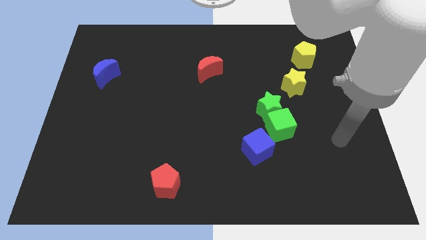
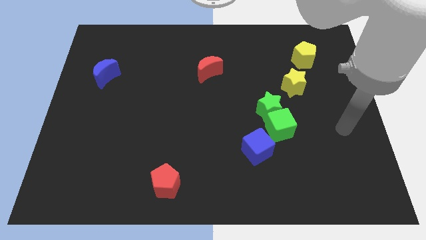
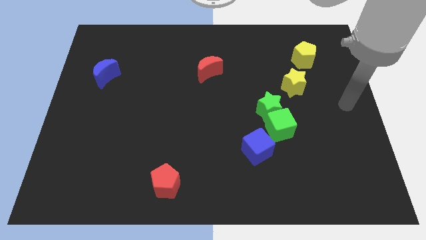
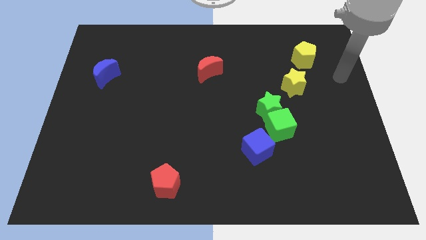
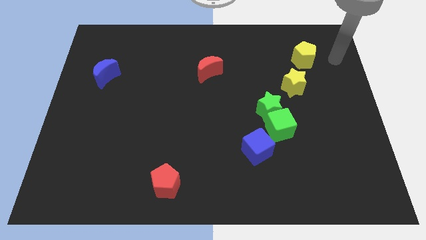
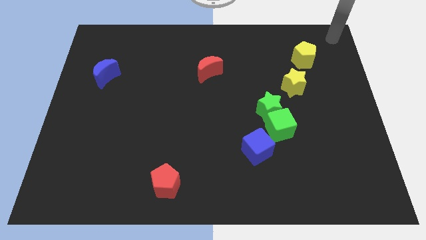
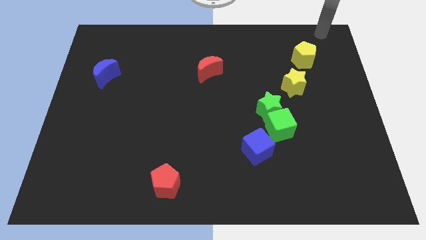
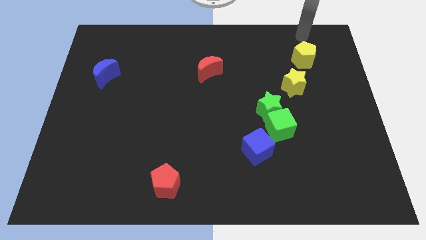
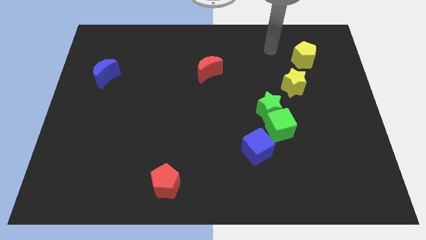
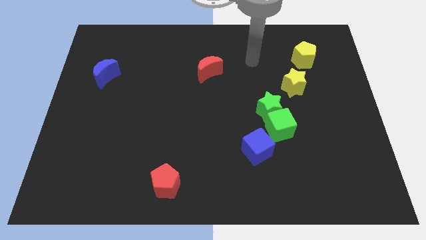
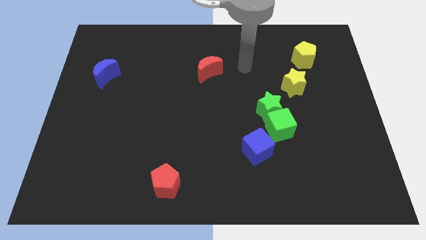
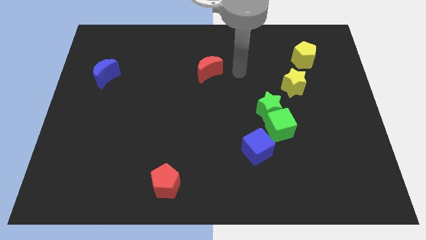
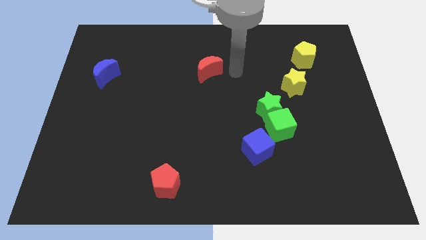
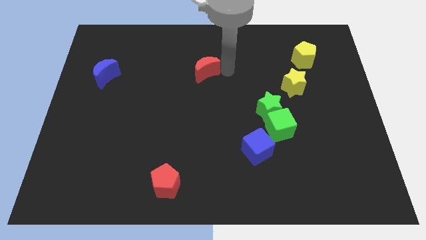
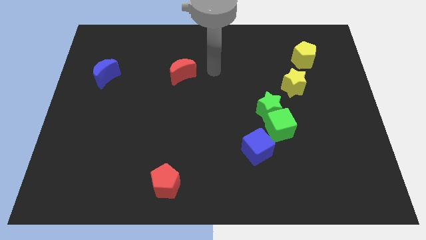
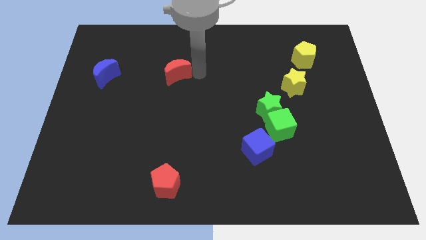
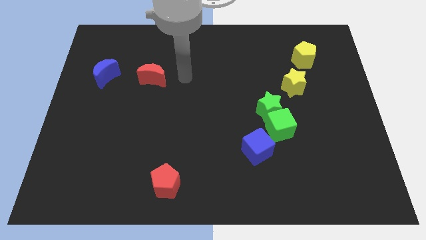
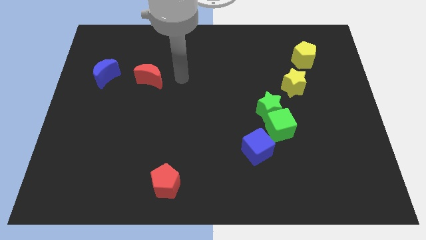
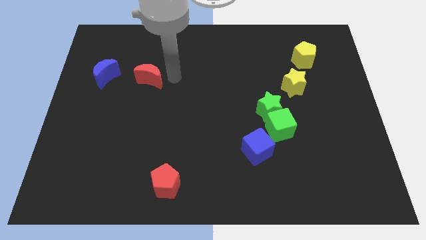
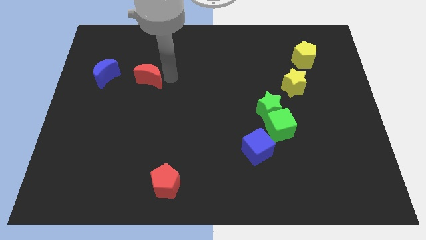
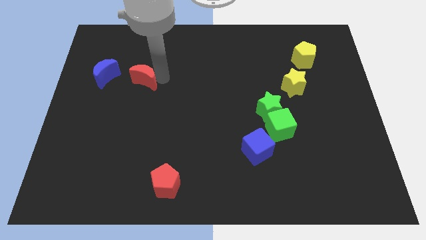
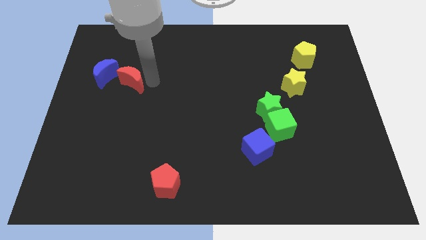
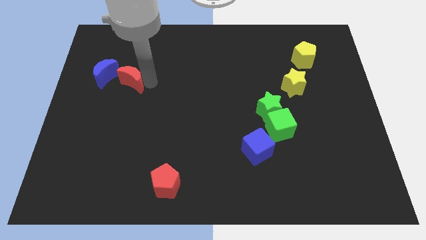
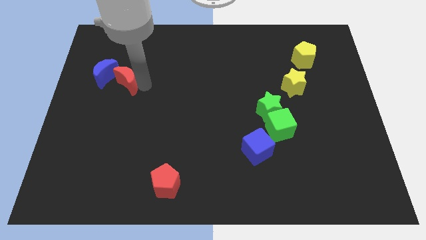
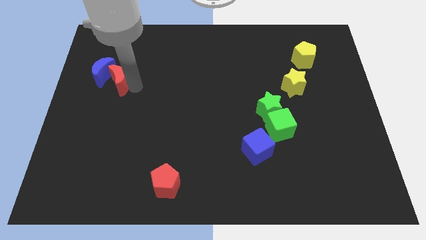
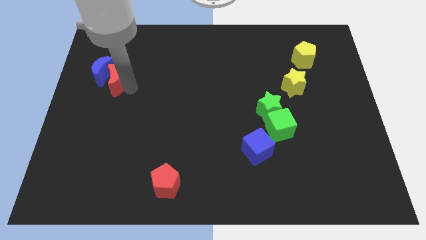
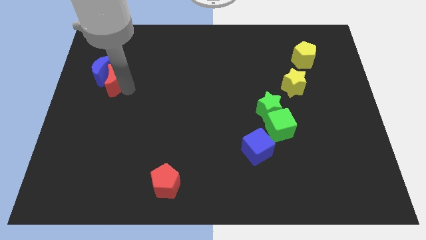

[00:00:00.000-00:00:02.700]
push the red moon towards the blue moon

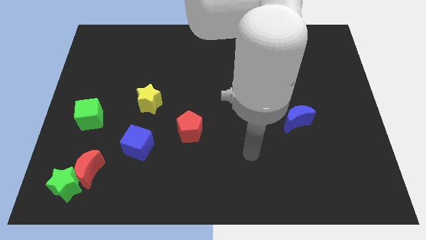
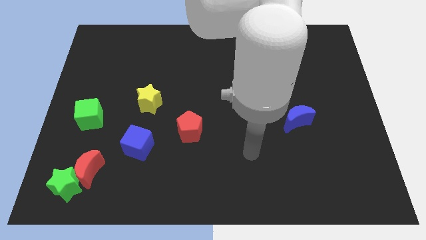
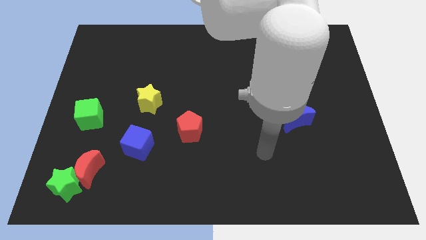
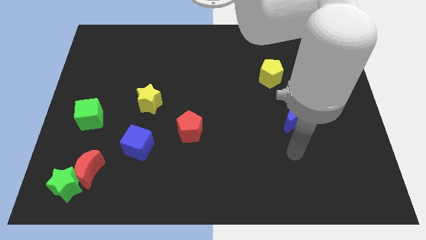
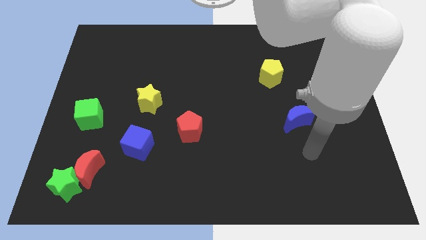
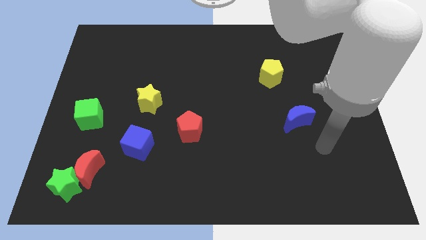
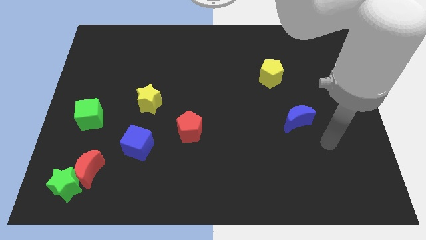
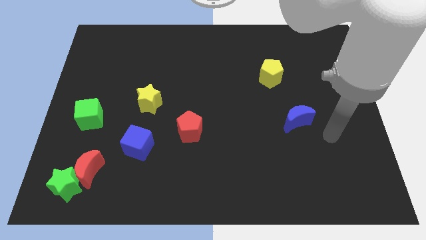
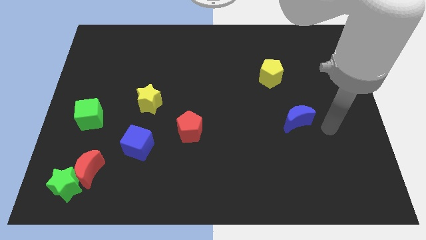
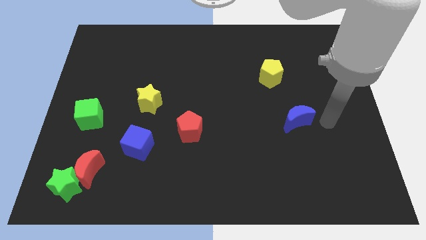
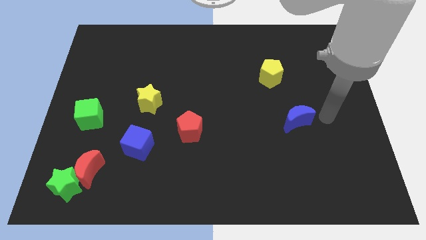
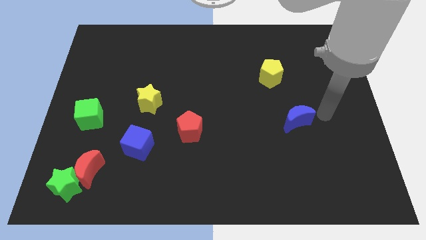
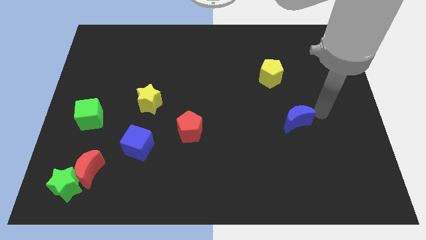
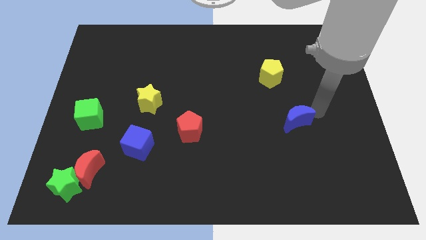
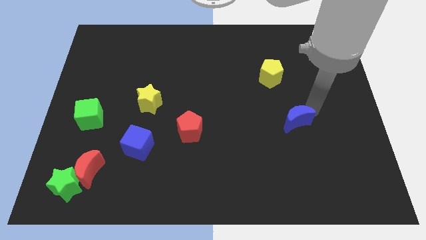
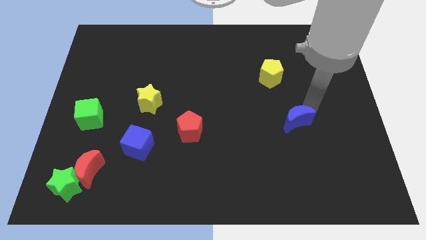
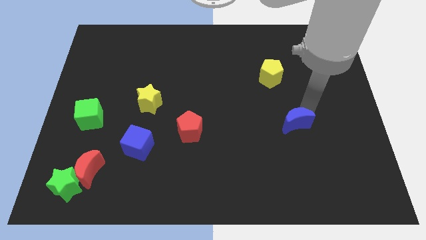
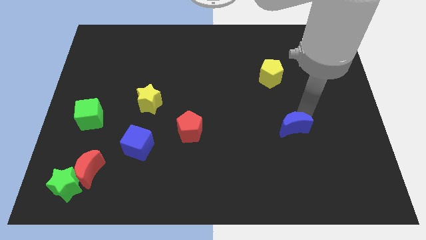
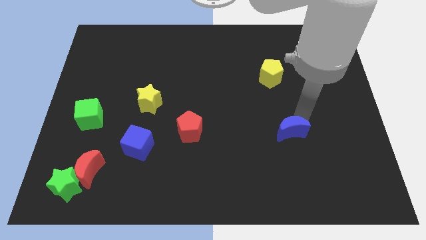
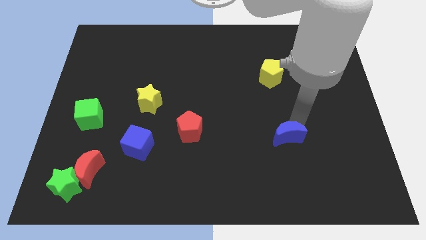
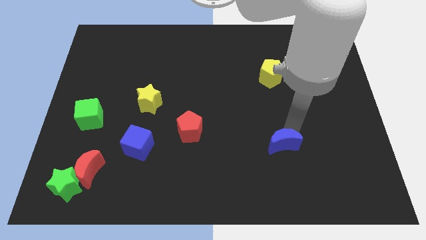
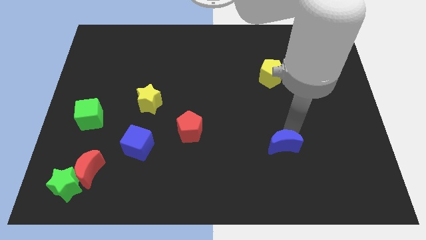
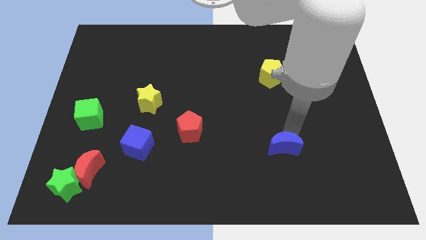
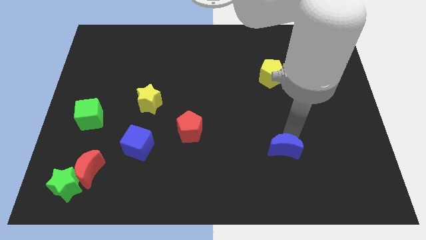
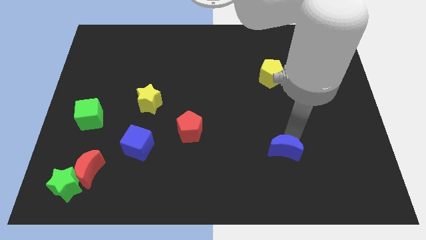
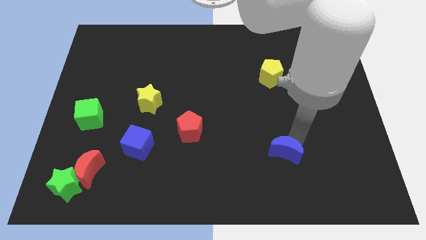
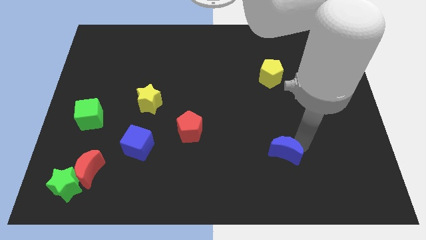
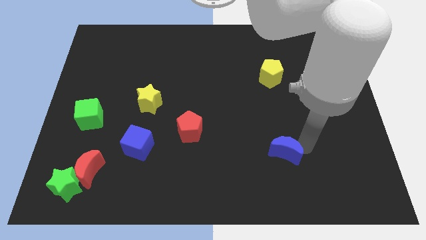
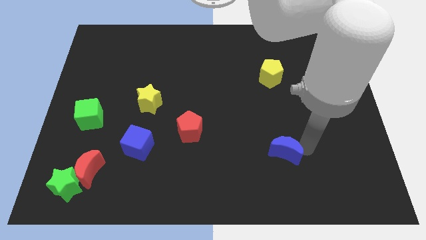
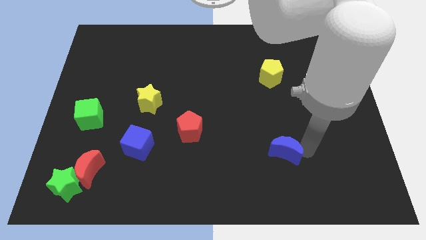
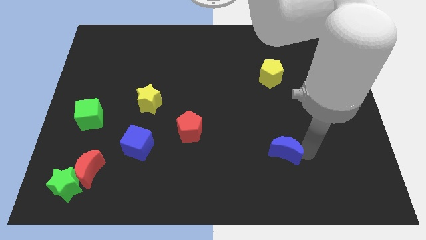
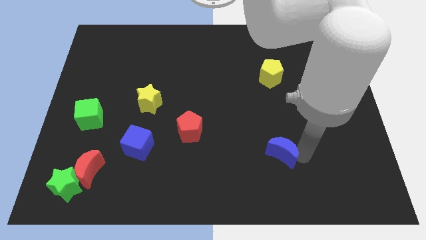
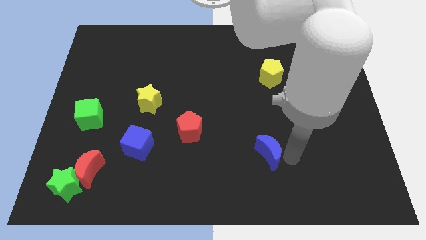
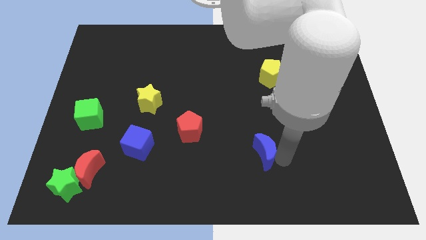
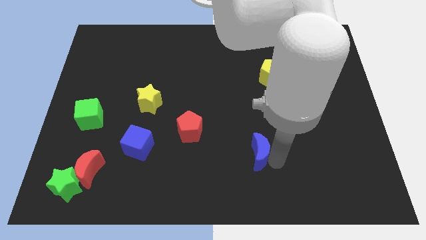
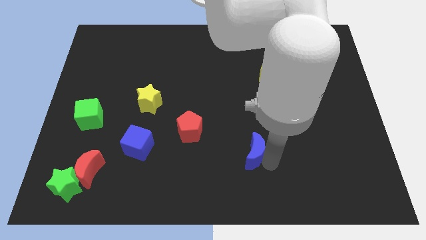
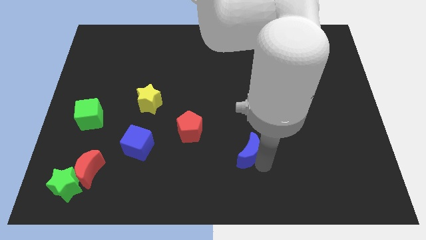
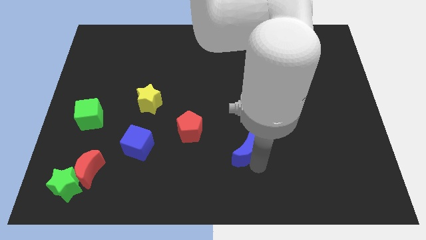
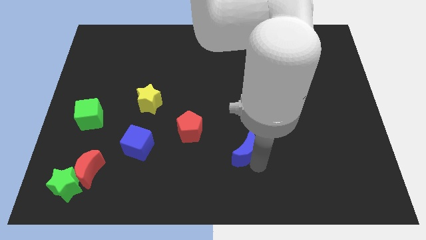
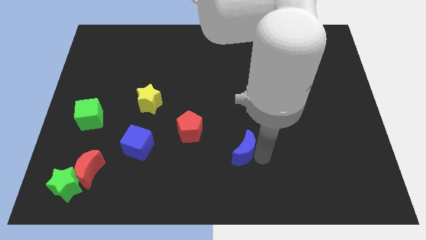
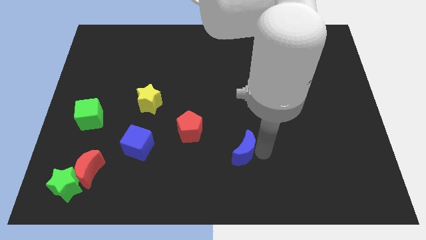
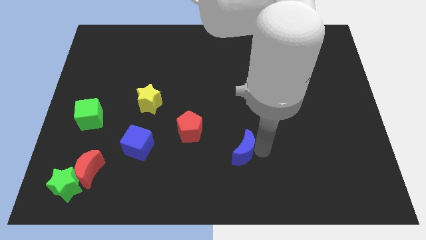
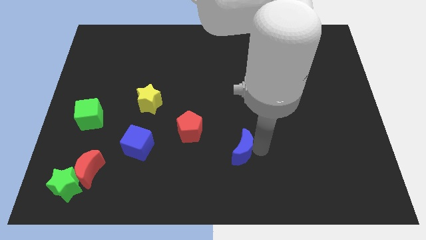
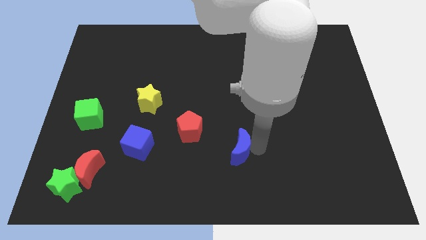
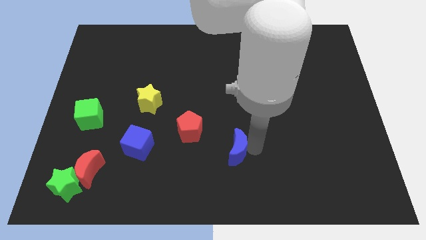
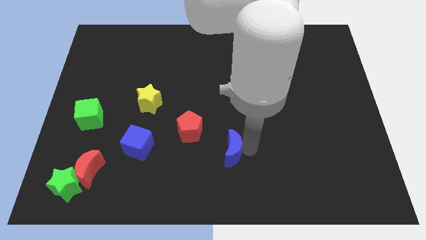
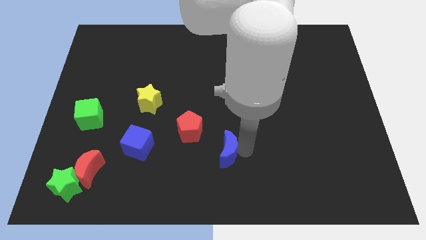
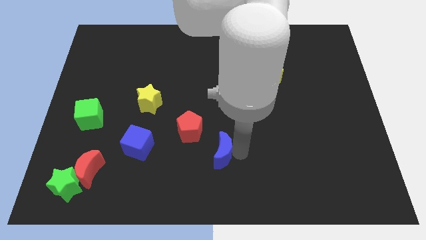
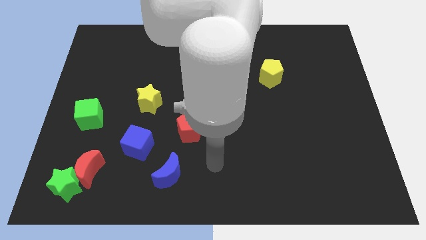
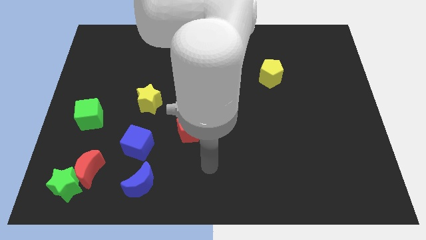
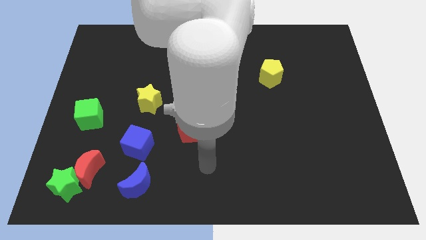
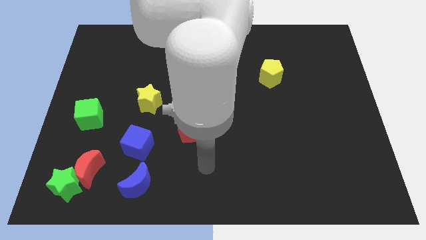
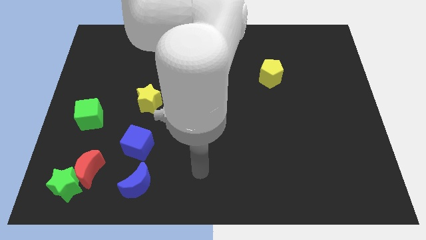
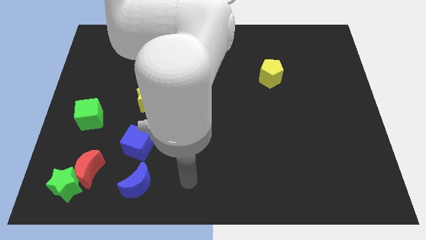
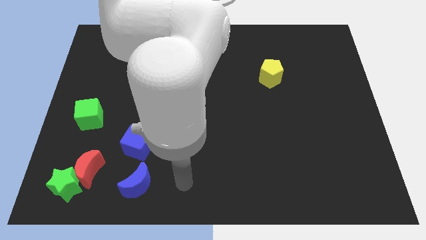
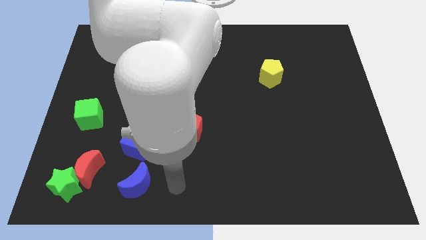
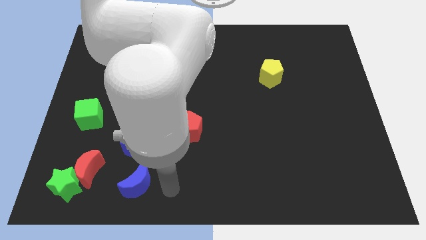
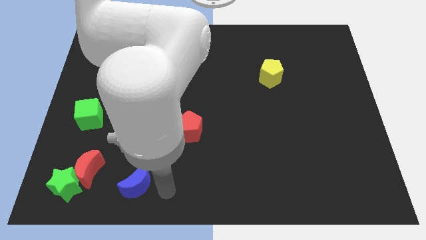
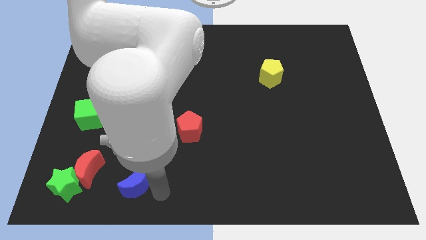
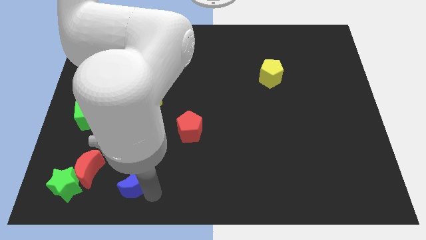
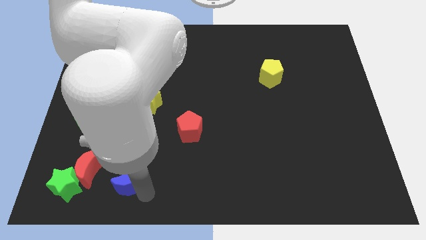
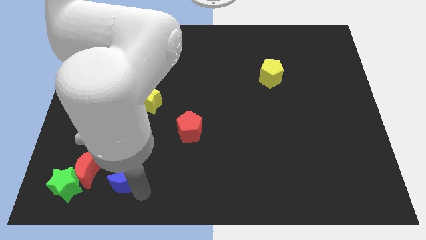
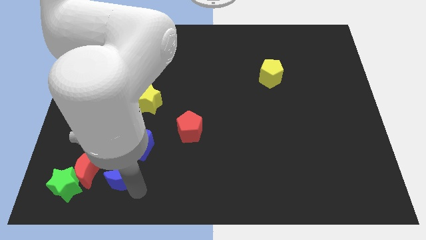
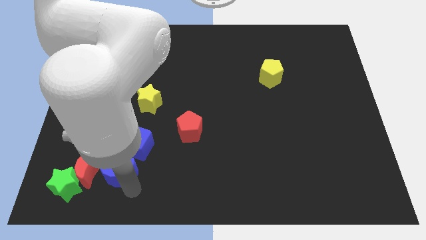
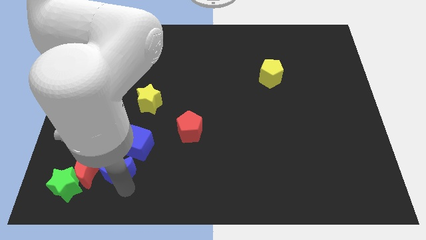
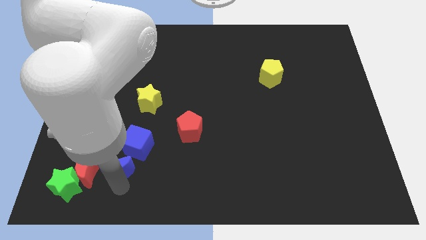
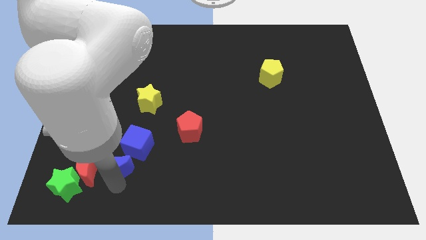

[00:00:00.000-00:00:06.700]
move the blue moon to the red moon
